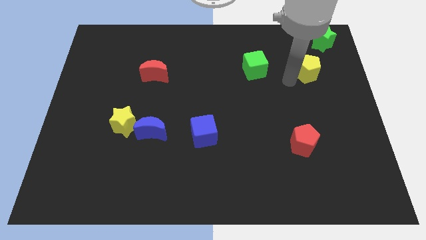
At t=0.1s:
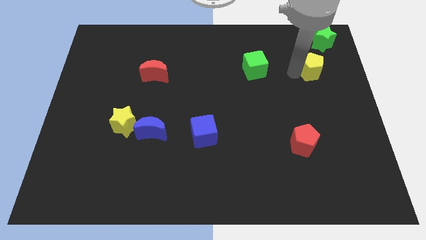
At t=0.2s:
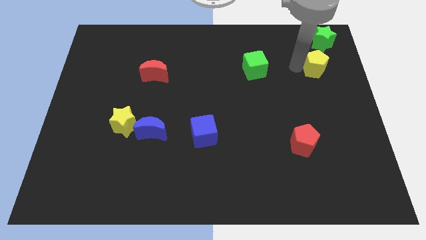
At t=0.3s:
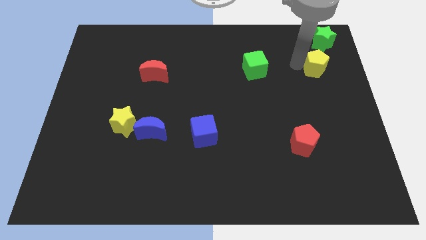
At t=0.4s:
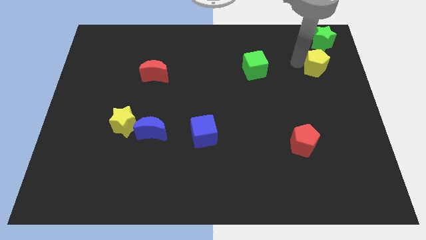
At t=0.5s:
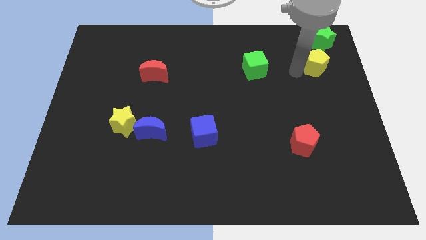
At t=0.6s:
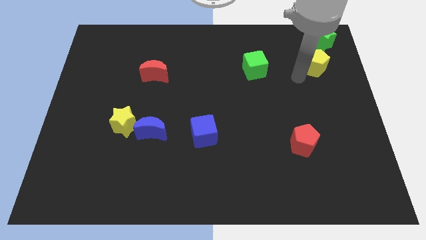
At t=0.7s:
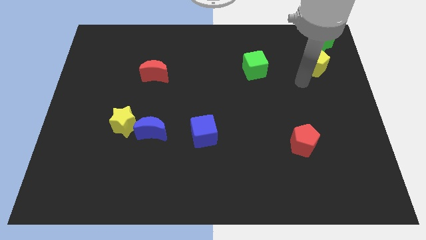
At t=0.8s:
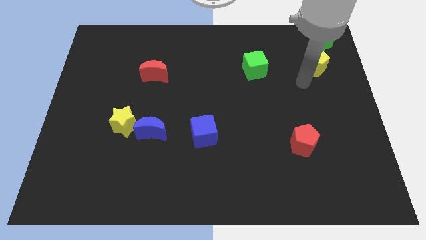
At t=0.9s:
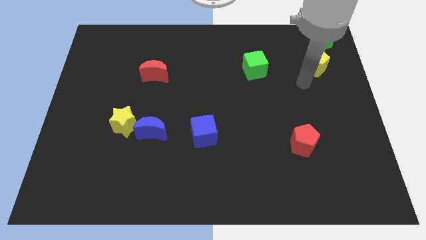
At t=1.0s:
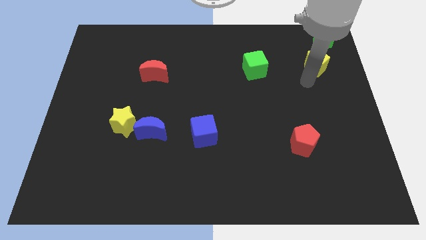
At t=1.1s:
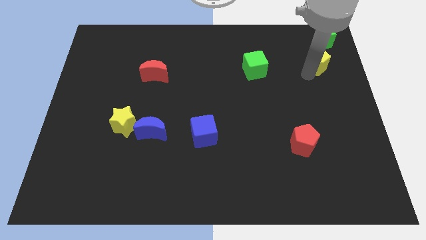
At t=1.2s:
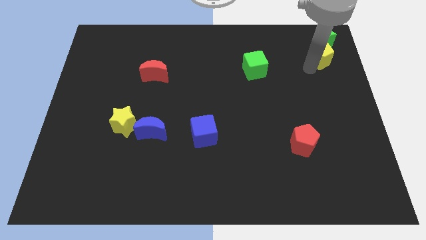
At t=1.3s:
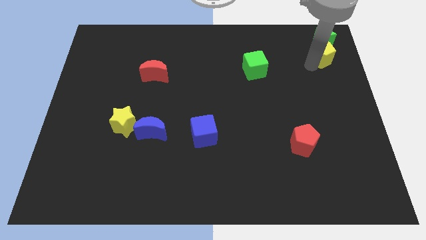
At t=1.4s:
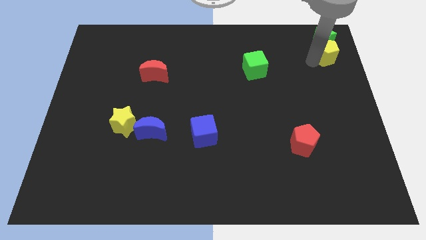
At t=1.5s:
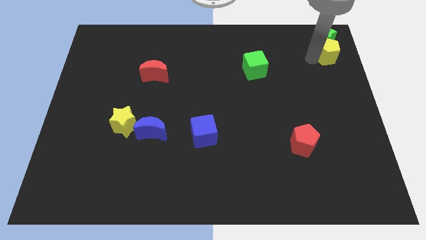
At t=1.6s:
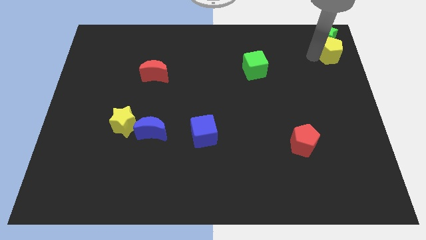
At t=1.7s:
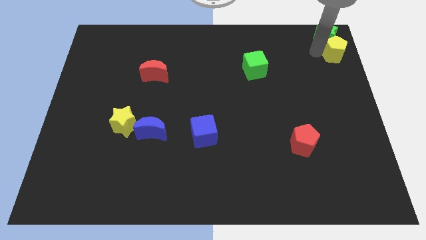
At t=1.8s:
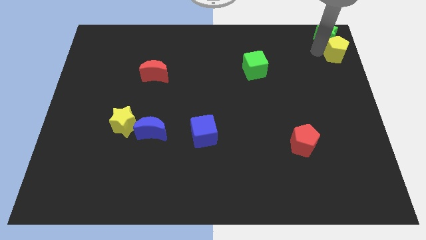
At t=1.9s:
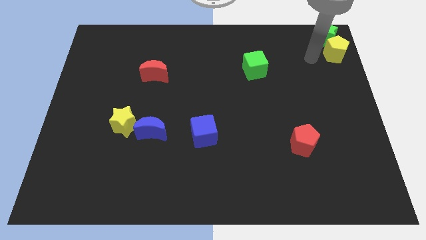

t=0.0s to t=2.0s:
place the yellow pentagon close to the green star

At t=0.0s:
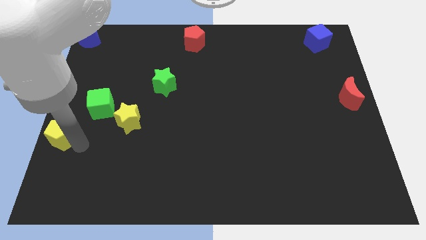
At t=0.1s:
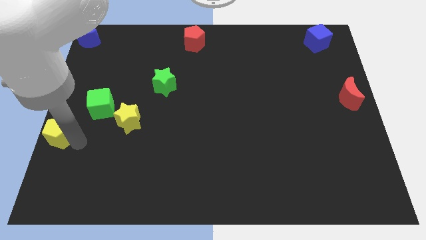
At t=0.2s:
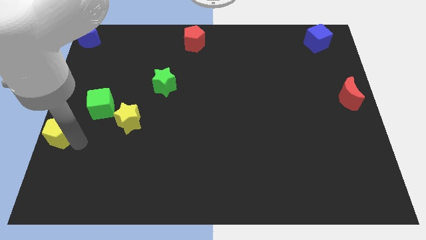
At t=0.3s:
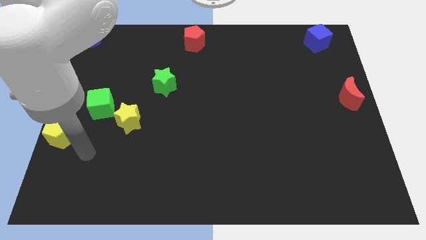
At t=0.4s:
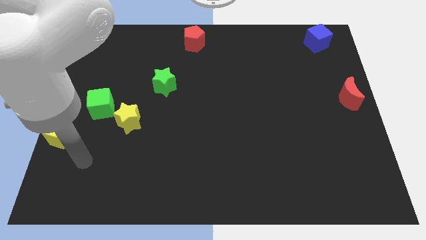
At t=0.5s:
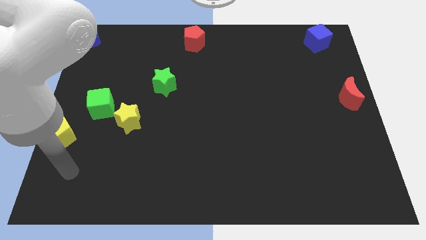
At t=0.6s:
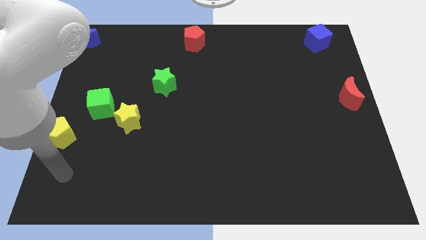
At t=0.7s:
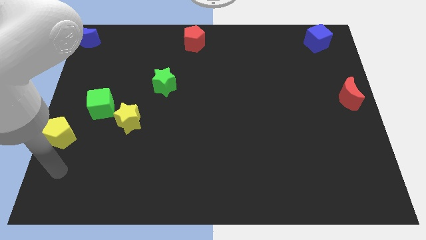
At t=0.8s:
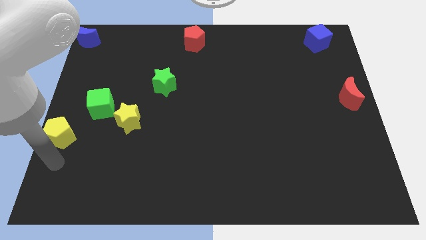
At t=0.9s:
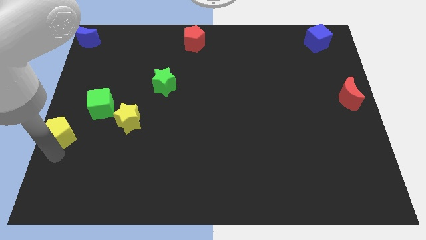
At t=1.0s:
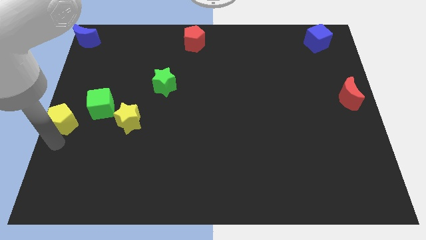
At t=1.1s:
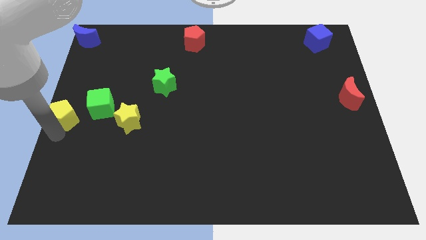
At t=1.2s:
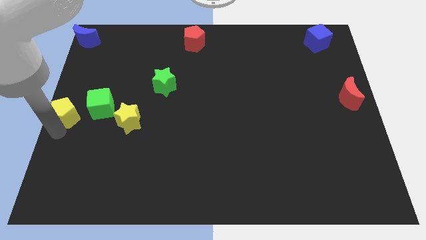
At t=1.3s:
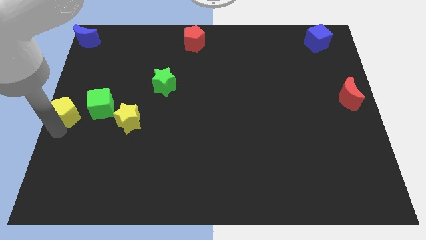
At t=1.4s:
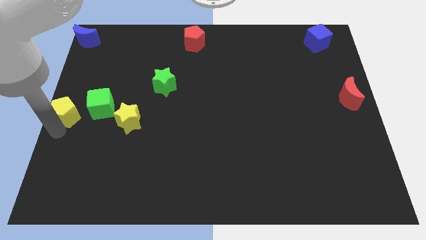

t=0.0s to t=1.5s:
push the yellow pentagon towards center left

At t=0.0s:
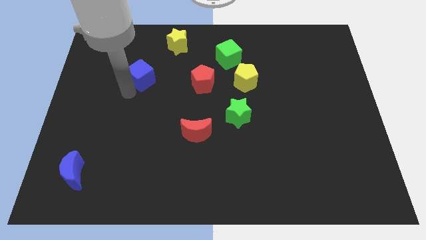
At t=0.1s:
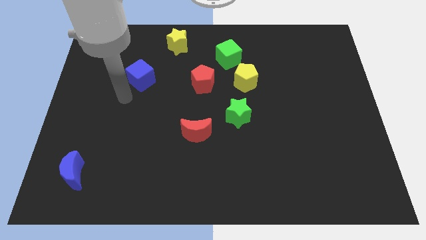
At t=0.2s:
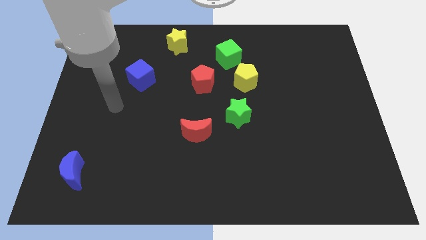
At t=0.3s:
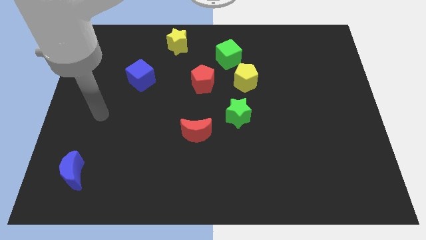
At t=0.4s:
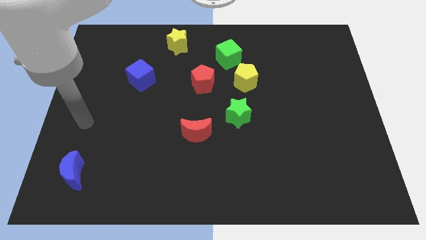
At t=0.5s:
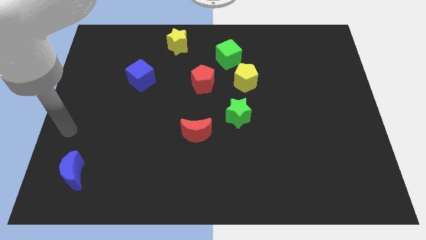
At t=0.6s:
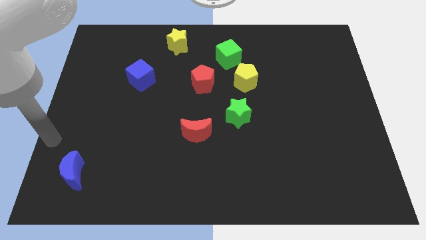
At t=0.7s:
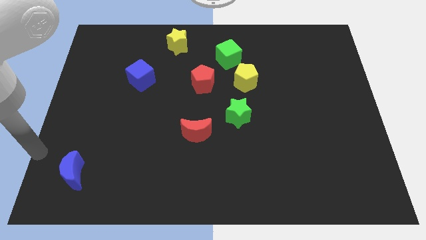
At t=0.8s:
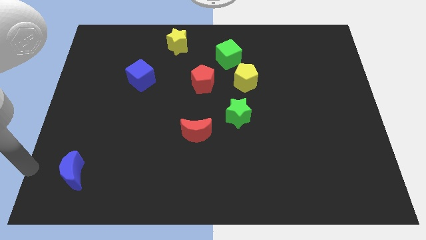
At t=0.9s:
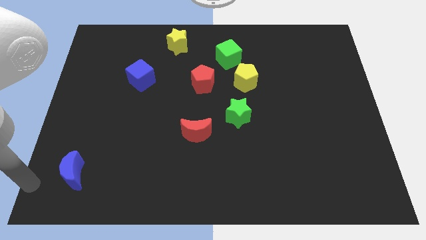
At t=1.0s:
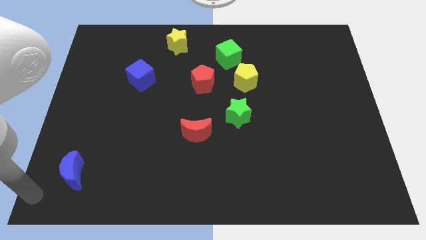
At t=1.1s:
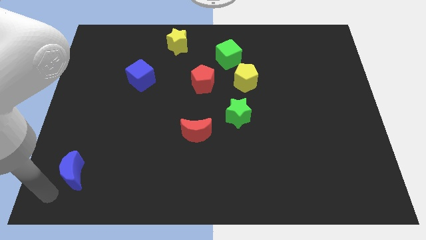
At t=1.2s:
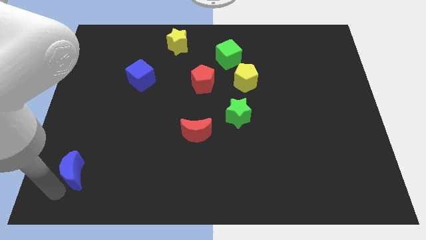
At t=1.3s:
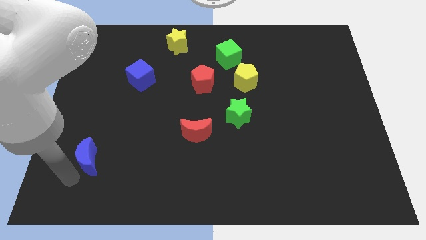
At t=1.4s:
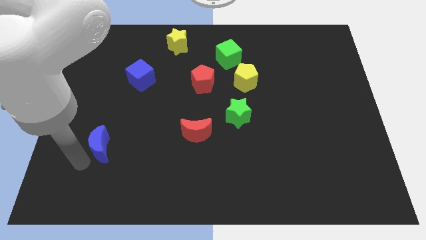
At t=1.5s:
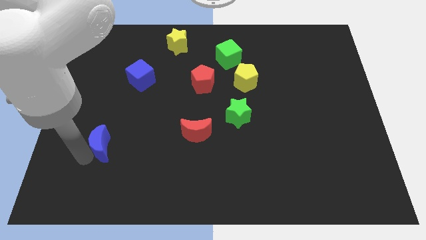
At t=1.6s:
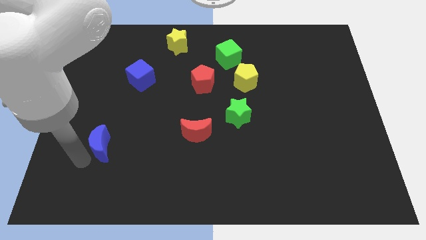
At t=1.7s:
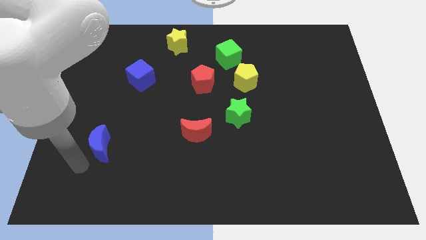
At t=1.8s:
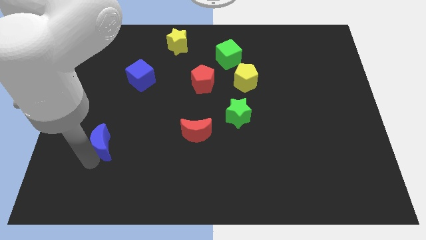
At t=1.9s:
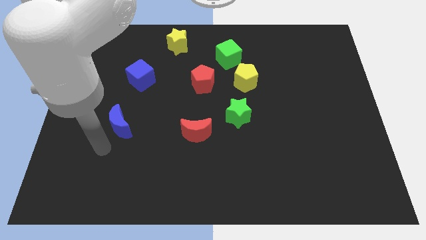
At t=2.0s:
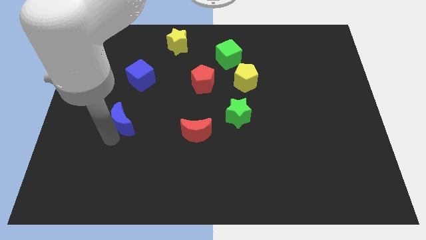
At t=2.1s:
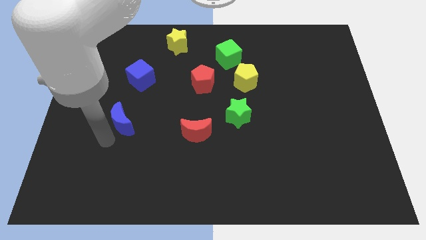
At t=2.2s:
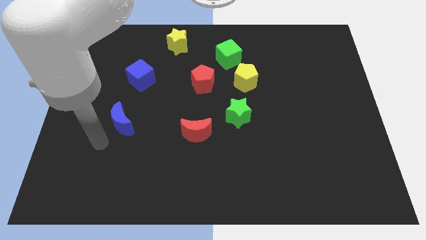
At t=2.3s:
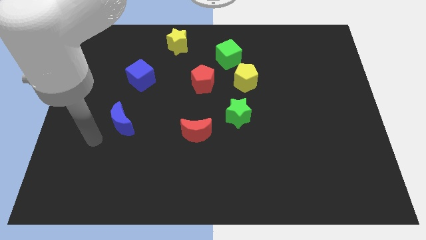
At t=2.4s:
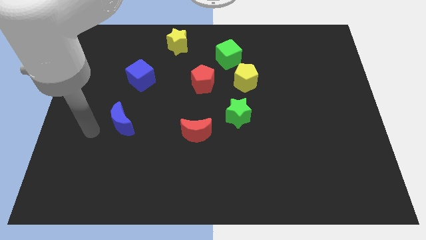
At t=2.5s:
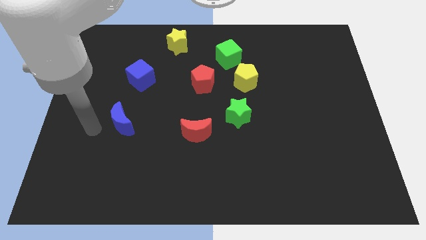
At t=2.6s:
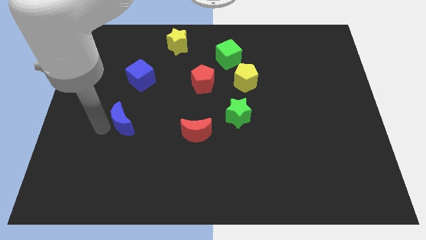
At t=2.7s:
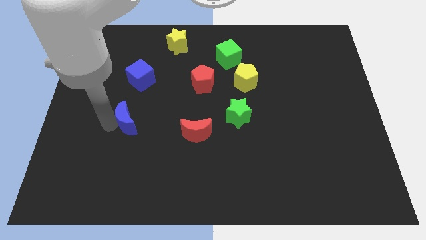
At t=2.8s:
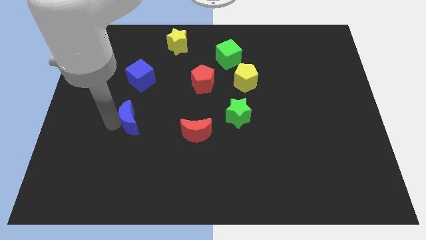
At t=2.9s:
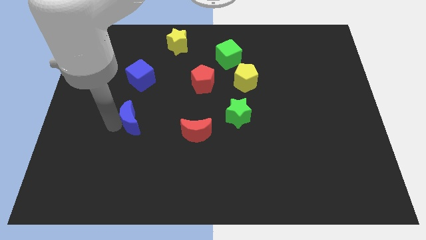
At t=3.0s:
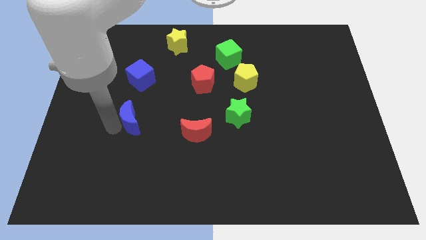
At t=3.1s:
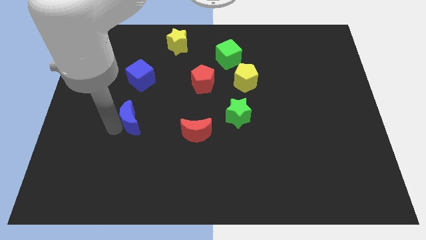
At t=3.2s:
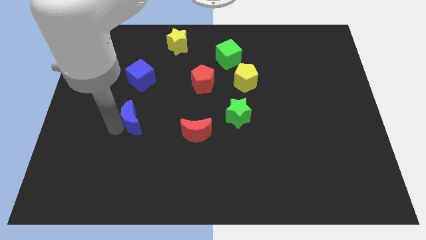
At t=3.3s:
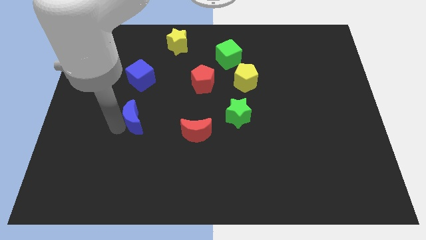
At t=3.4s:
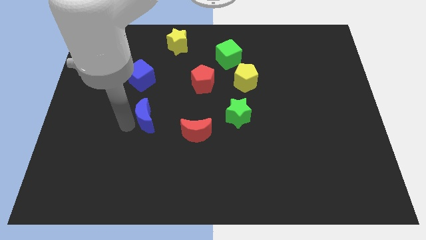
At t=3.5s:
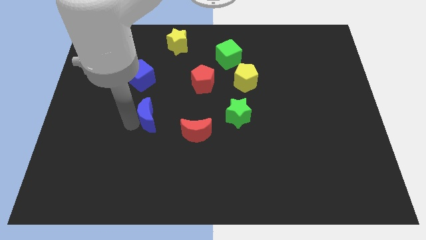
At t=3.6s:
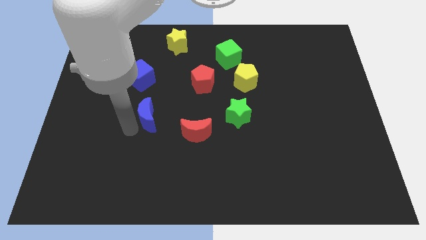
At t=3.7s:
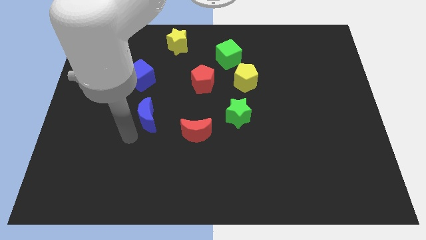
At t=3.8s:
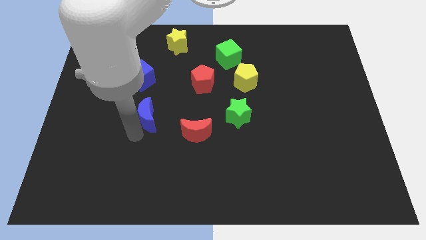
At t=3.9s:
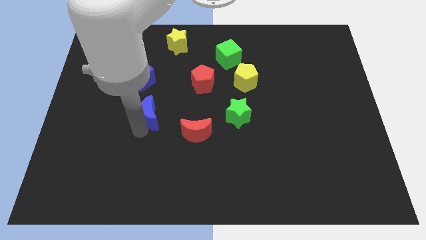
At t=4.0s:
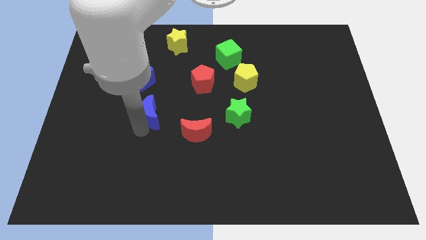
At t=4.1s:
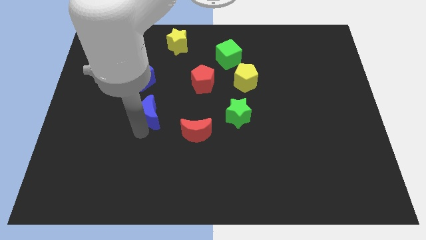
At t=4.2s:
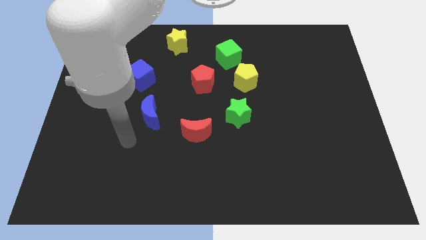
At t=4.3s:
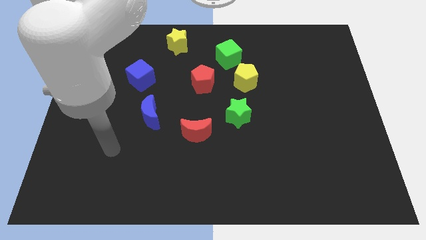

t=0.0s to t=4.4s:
move the blue crescent vertically to the bottom of the blue cube

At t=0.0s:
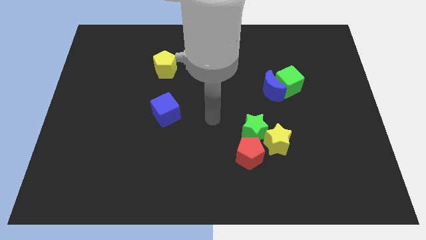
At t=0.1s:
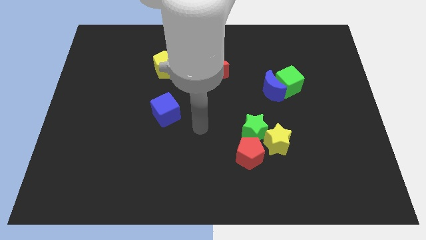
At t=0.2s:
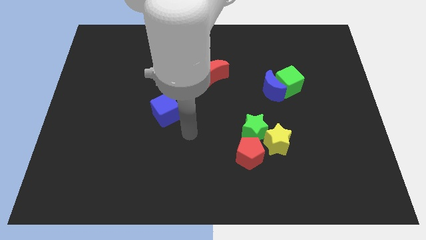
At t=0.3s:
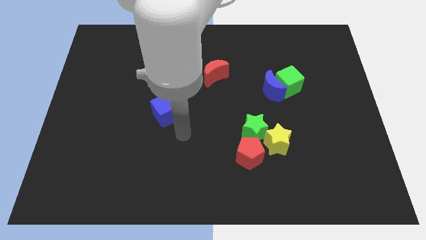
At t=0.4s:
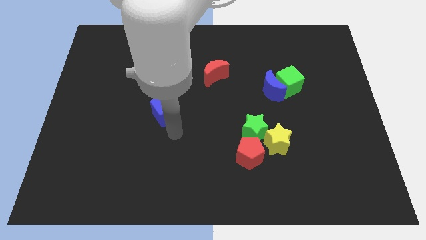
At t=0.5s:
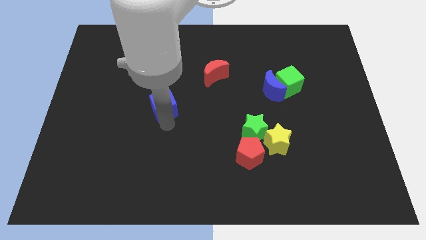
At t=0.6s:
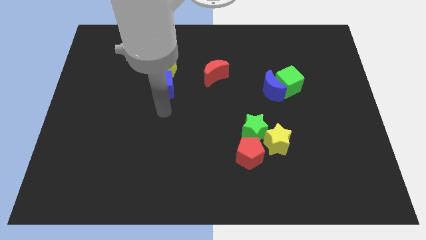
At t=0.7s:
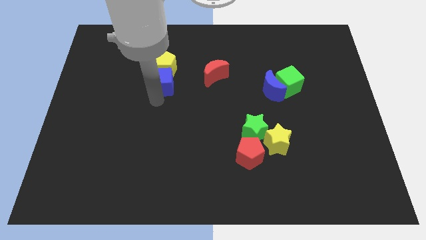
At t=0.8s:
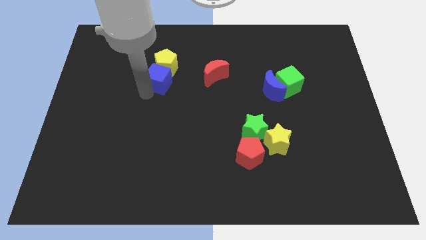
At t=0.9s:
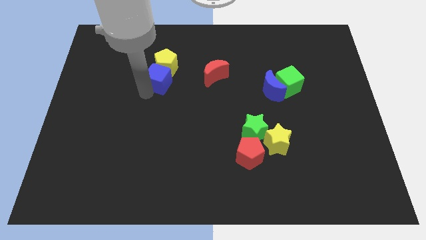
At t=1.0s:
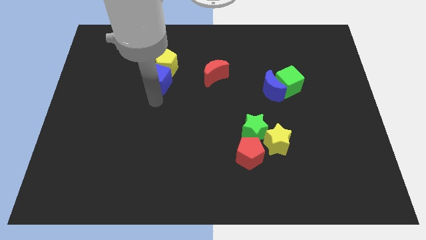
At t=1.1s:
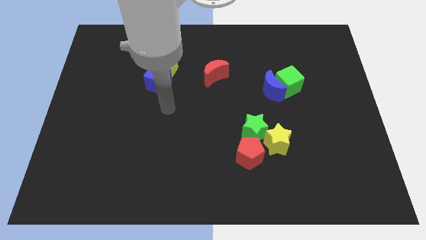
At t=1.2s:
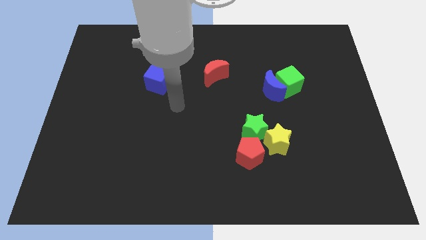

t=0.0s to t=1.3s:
push the blue cube into the yellow pentagon
